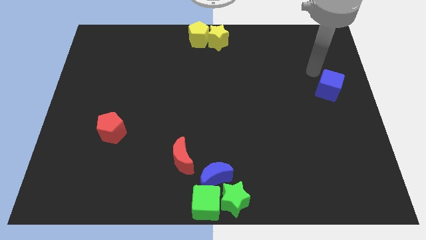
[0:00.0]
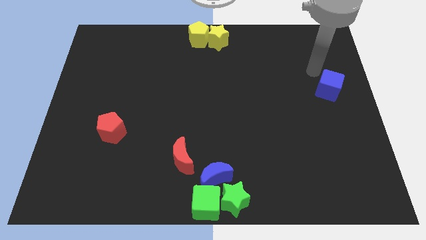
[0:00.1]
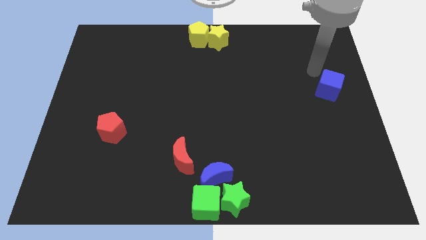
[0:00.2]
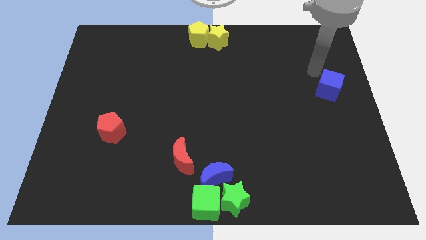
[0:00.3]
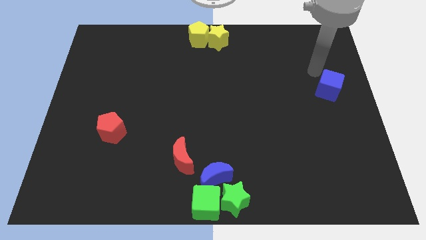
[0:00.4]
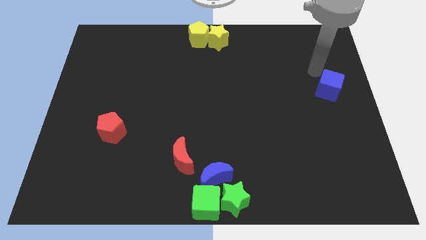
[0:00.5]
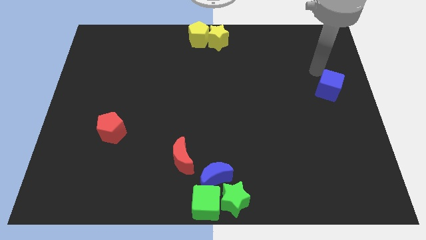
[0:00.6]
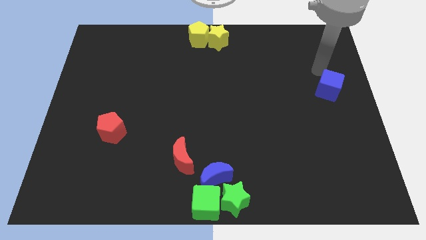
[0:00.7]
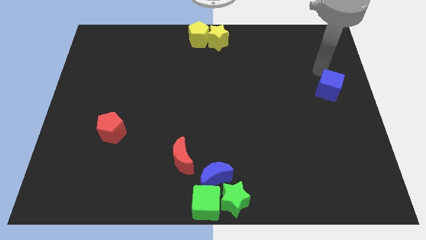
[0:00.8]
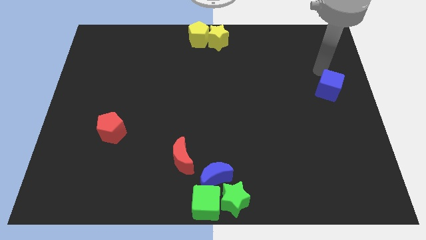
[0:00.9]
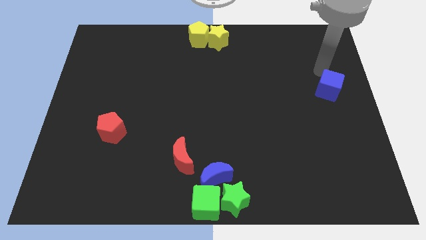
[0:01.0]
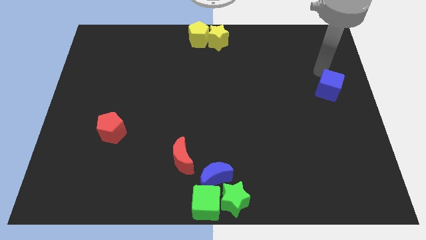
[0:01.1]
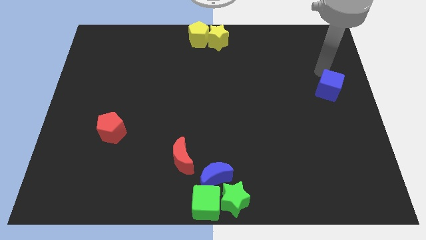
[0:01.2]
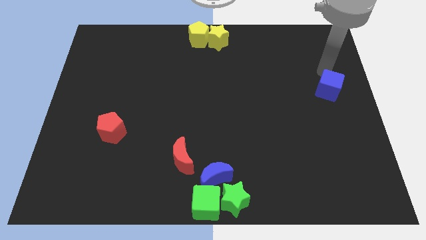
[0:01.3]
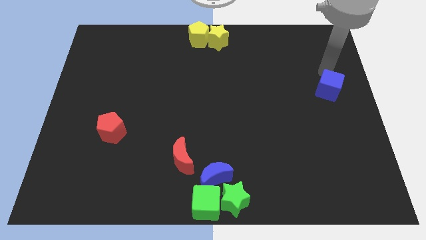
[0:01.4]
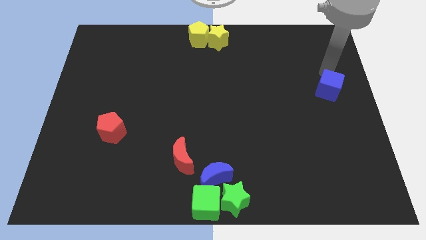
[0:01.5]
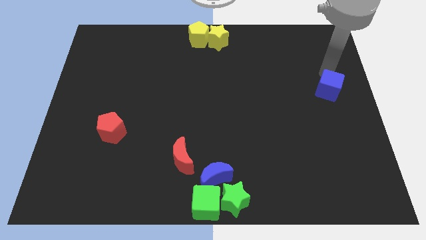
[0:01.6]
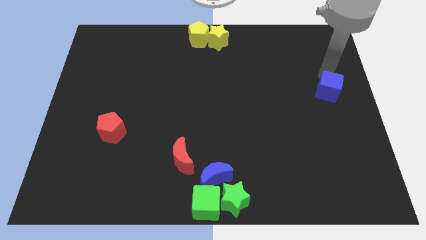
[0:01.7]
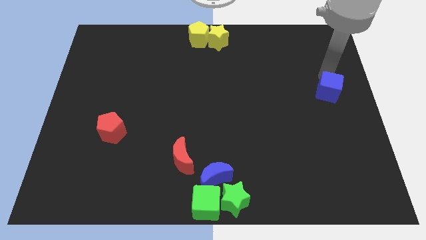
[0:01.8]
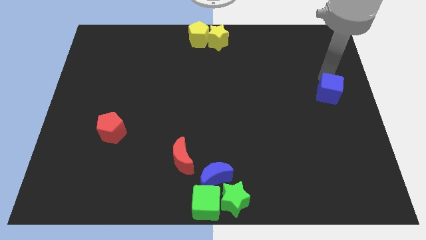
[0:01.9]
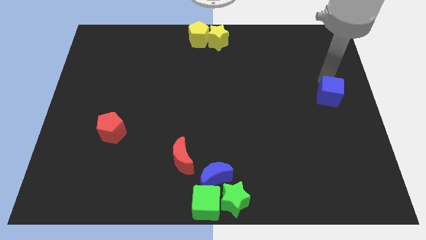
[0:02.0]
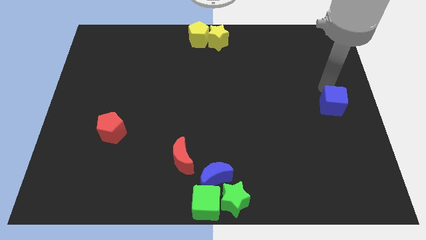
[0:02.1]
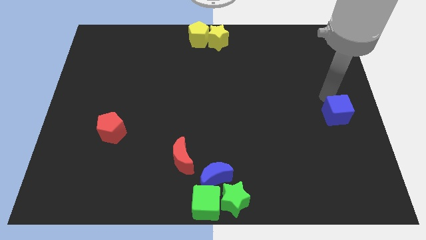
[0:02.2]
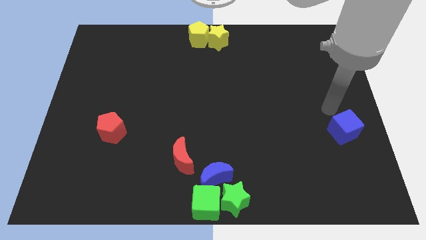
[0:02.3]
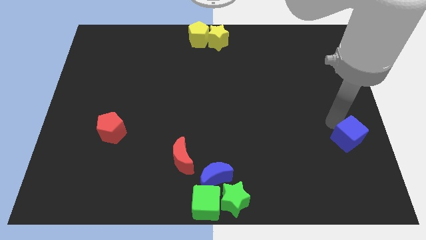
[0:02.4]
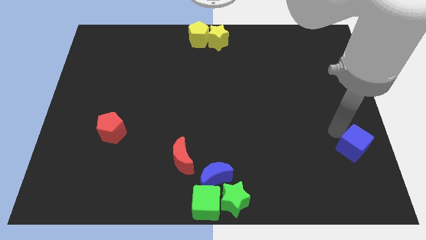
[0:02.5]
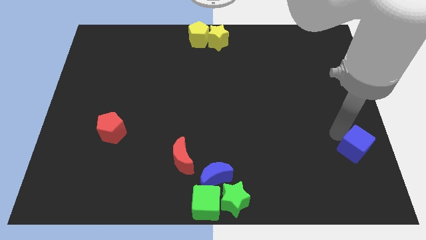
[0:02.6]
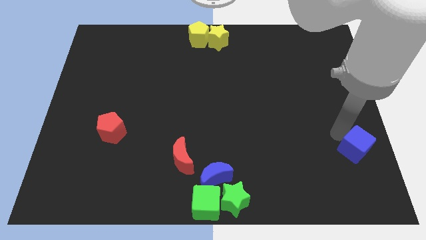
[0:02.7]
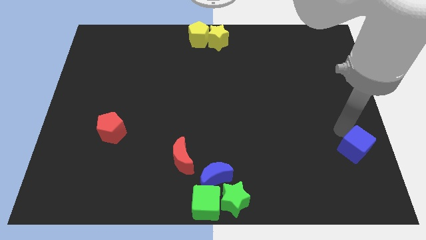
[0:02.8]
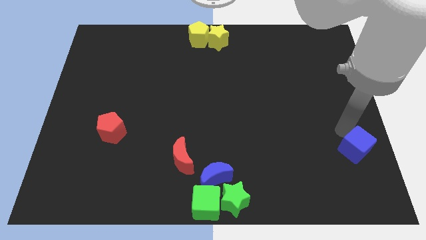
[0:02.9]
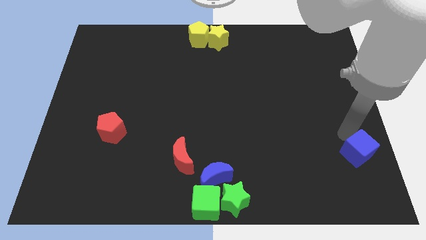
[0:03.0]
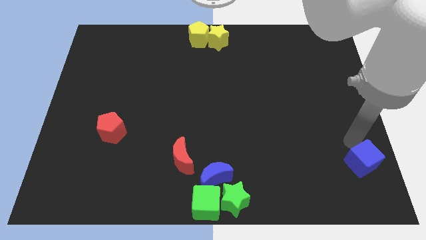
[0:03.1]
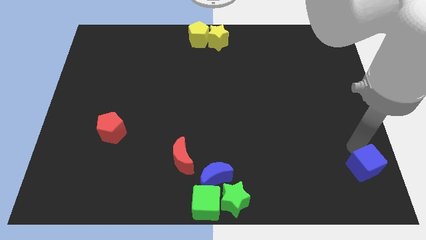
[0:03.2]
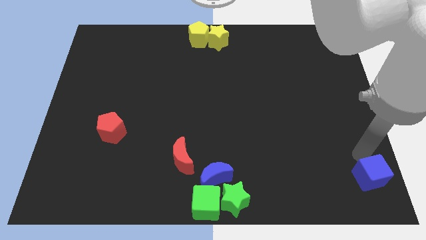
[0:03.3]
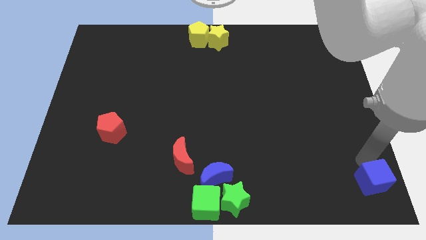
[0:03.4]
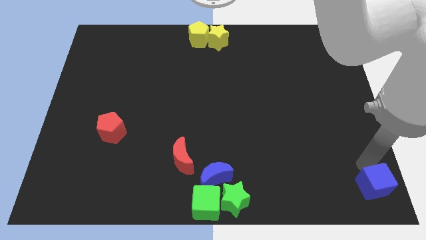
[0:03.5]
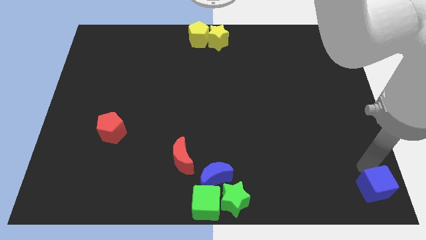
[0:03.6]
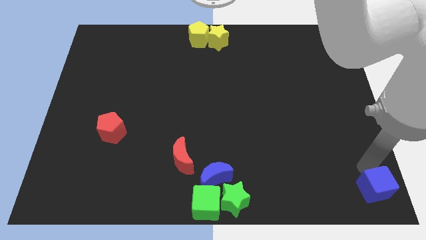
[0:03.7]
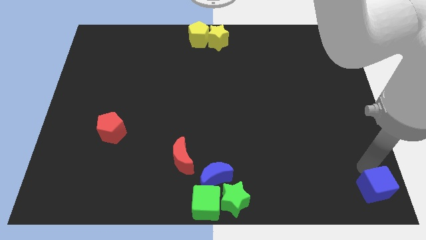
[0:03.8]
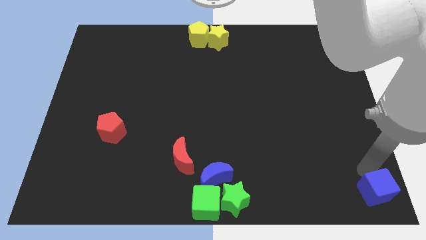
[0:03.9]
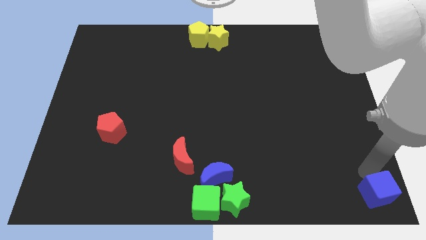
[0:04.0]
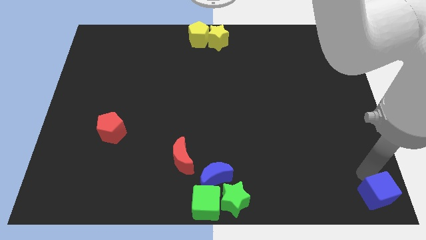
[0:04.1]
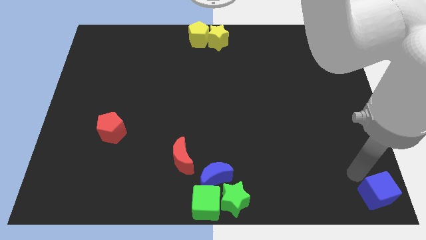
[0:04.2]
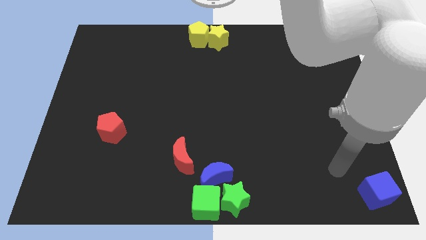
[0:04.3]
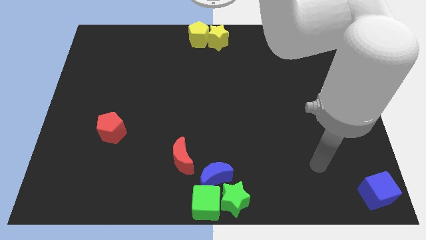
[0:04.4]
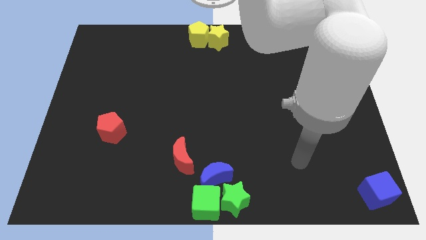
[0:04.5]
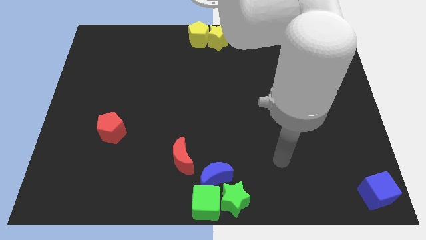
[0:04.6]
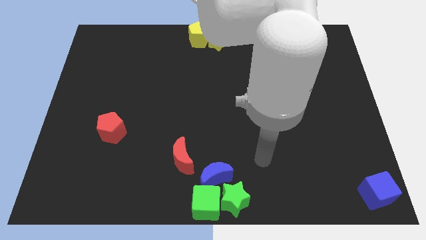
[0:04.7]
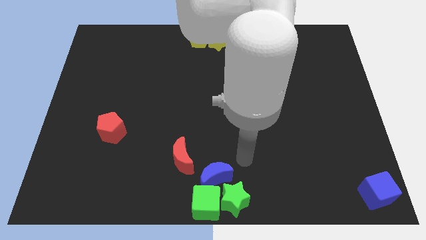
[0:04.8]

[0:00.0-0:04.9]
place the blue cube at the bottom right corner of the board

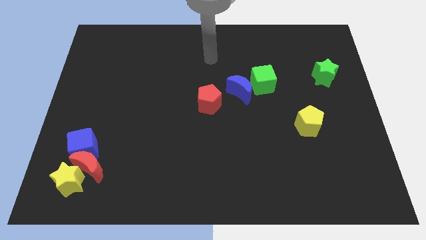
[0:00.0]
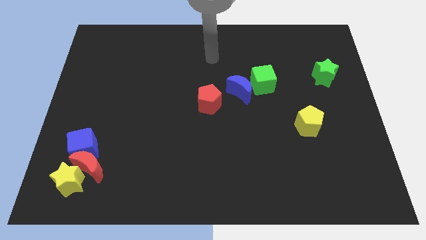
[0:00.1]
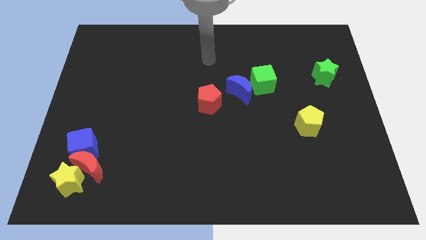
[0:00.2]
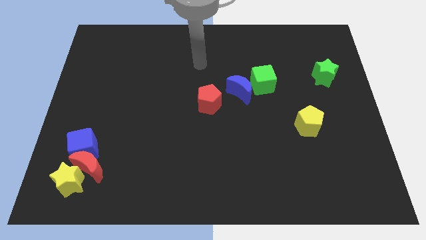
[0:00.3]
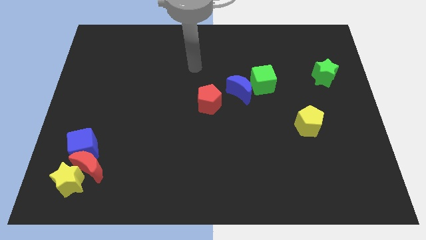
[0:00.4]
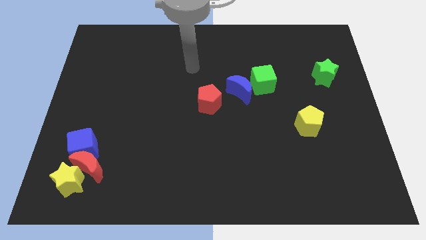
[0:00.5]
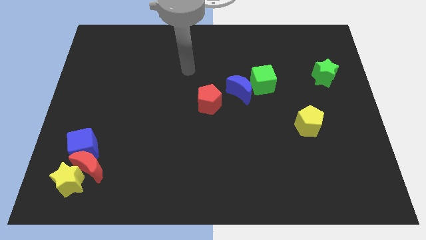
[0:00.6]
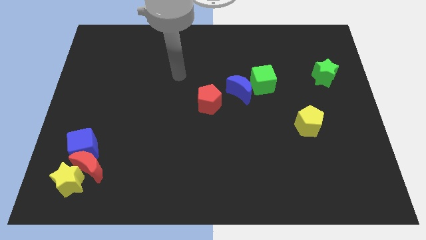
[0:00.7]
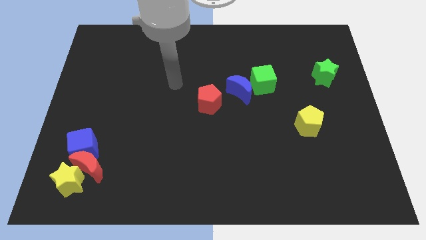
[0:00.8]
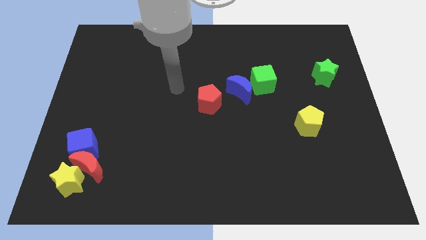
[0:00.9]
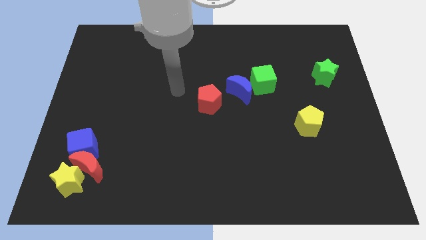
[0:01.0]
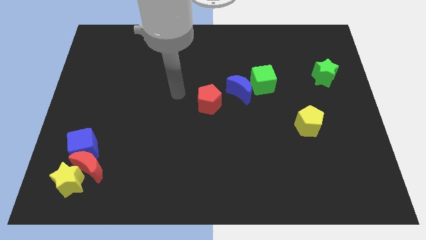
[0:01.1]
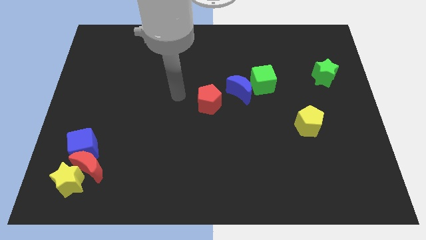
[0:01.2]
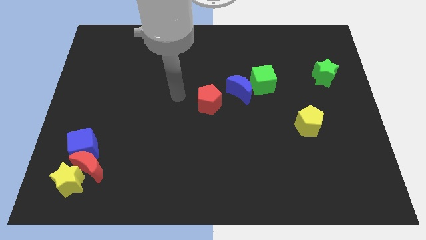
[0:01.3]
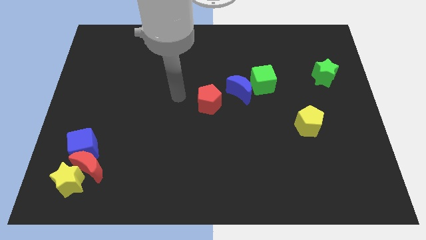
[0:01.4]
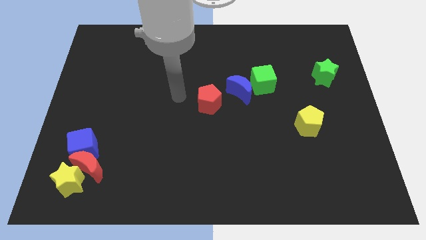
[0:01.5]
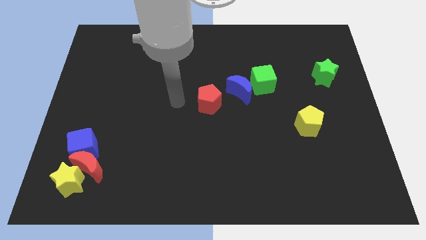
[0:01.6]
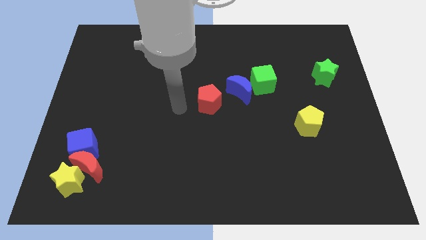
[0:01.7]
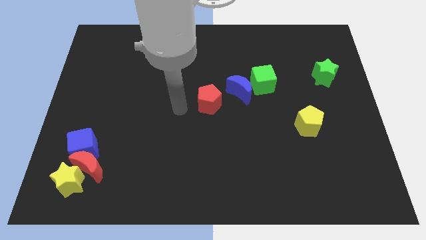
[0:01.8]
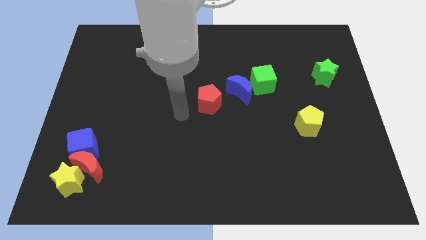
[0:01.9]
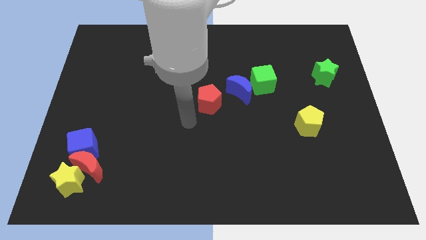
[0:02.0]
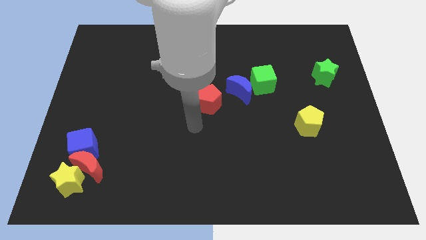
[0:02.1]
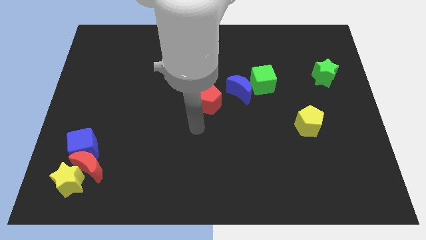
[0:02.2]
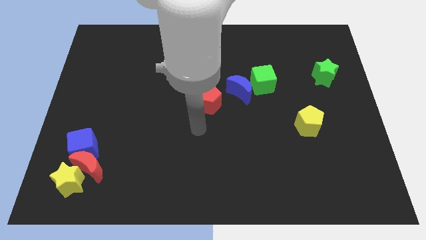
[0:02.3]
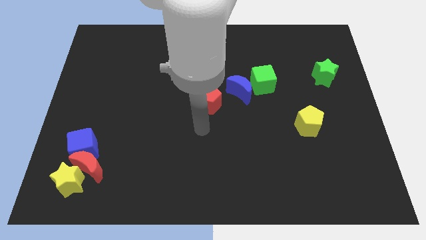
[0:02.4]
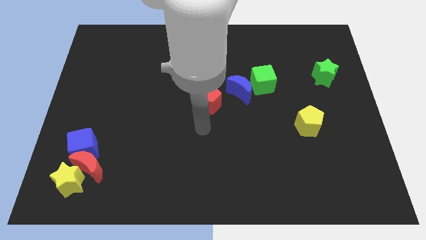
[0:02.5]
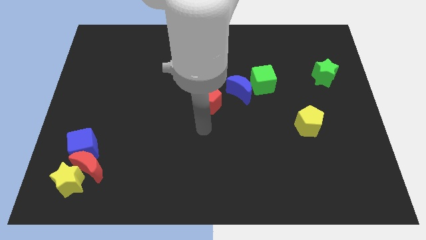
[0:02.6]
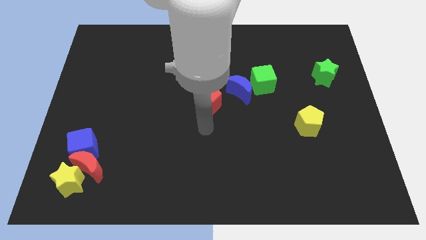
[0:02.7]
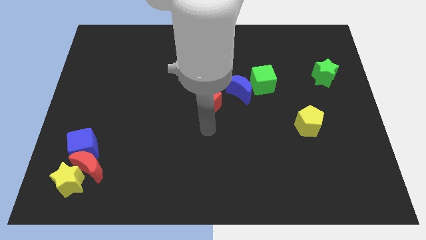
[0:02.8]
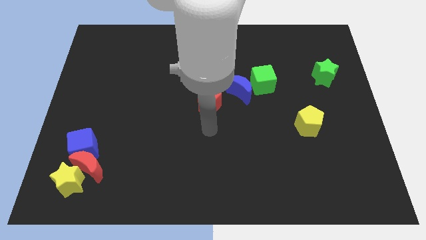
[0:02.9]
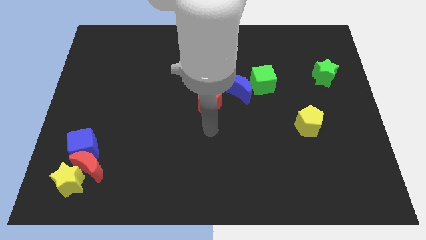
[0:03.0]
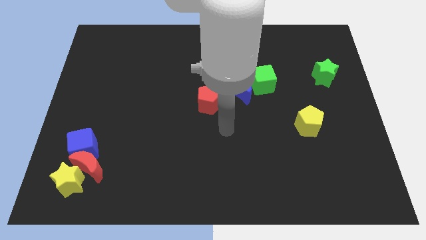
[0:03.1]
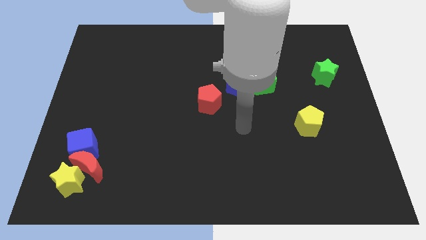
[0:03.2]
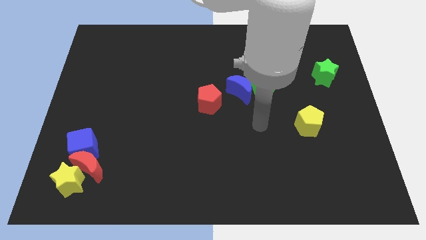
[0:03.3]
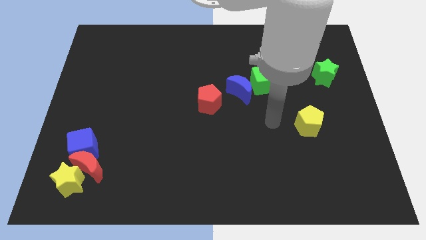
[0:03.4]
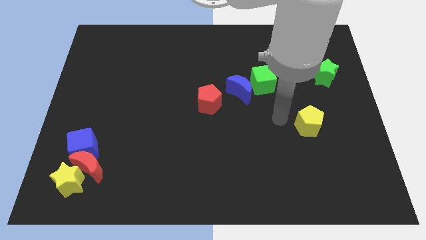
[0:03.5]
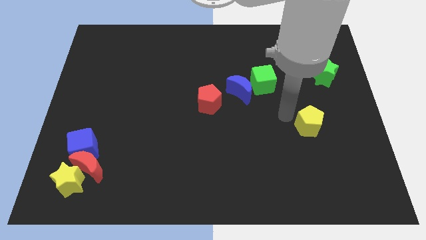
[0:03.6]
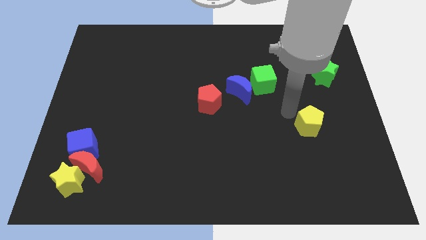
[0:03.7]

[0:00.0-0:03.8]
go near the yellow pentagon

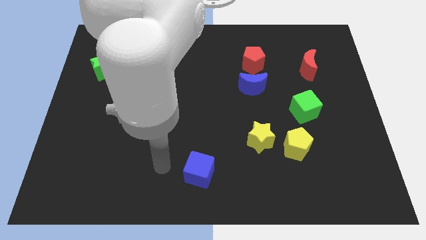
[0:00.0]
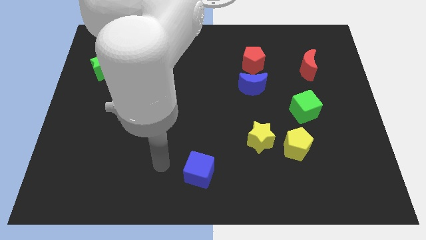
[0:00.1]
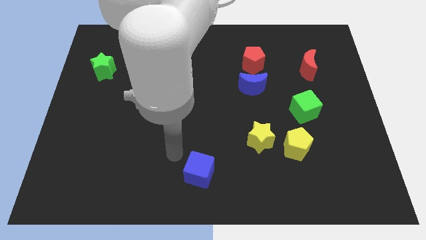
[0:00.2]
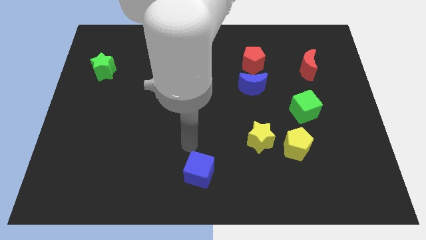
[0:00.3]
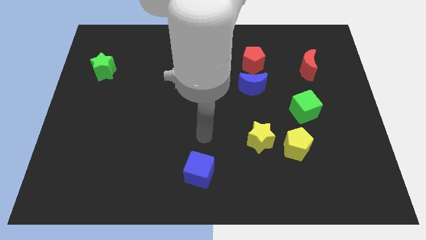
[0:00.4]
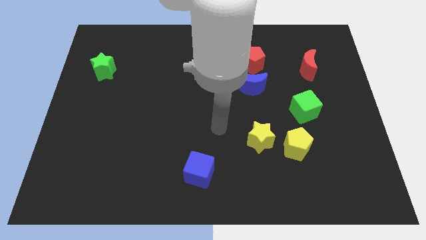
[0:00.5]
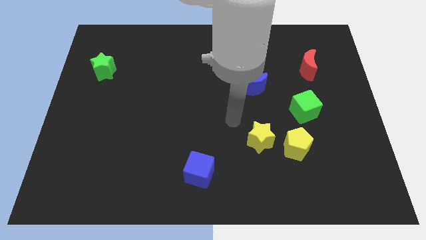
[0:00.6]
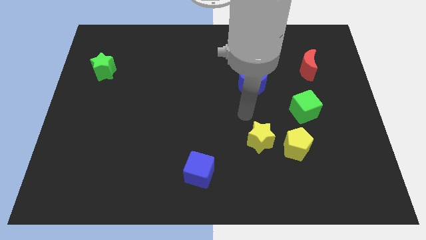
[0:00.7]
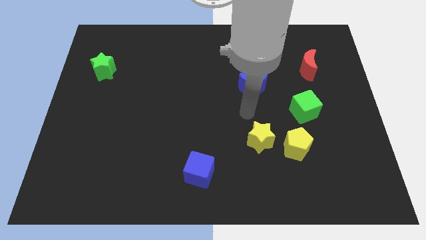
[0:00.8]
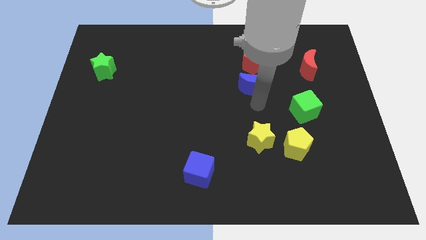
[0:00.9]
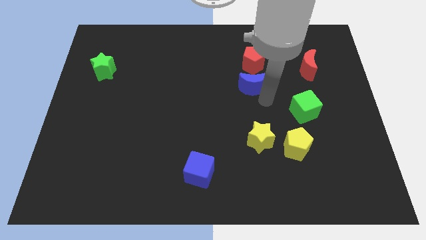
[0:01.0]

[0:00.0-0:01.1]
move your arm towards the blue crescent
